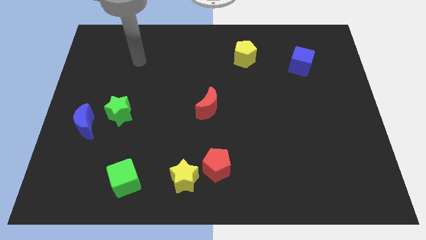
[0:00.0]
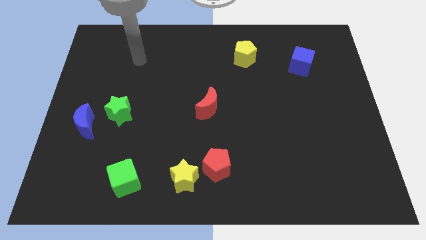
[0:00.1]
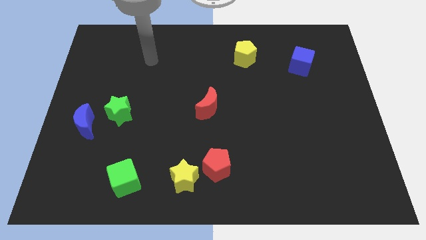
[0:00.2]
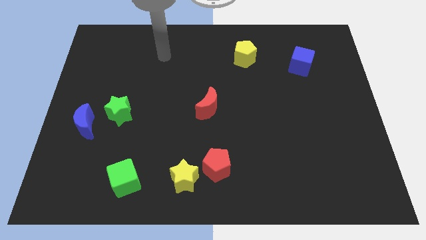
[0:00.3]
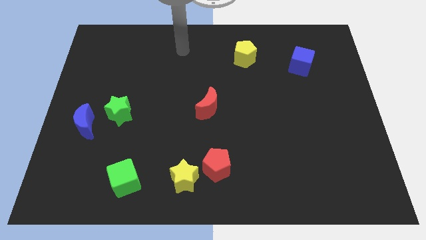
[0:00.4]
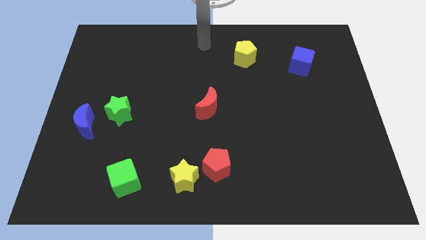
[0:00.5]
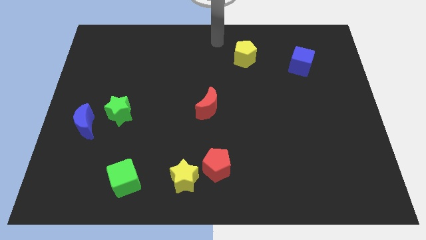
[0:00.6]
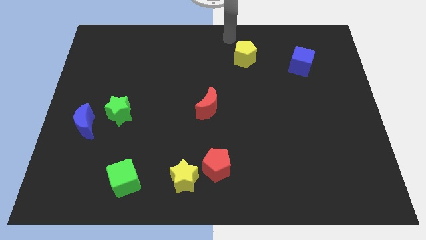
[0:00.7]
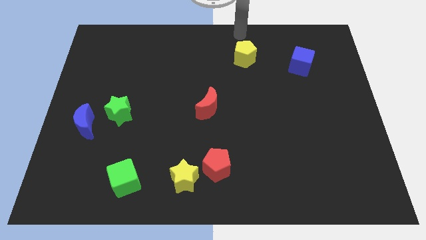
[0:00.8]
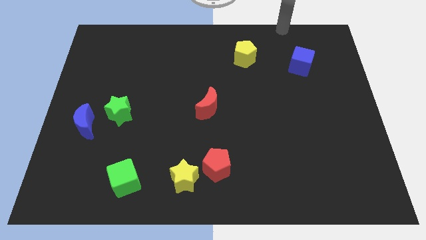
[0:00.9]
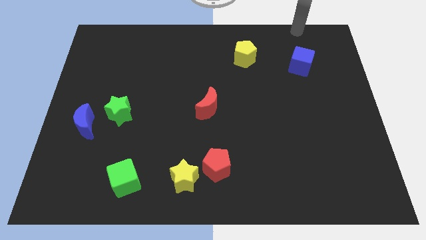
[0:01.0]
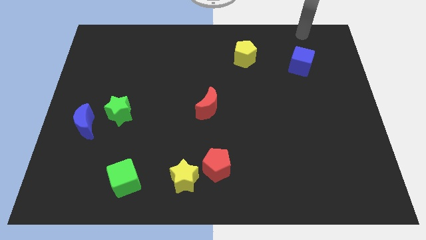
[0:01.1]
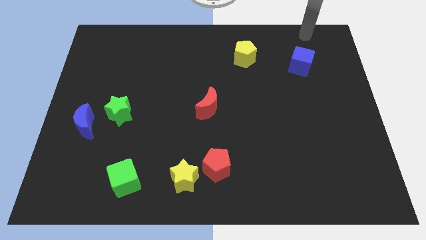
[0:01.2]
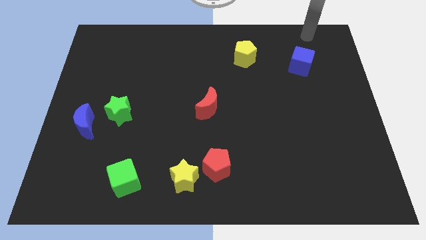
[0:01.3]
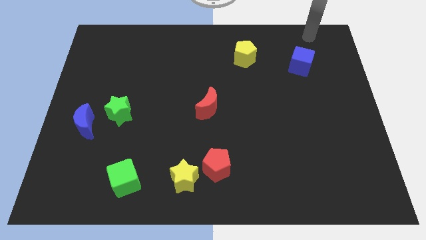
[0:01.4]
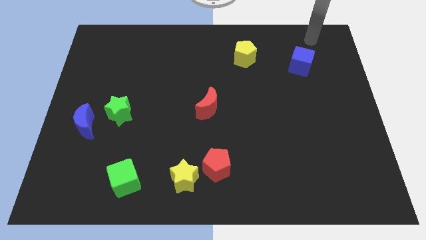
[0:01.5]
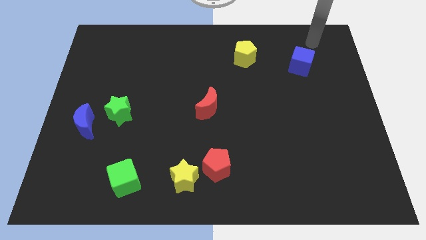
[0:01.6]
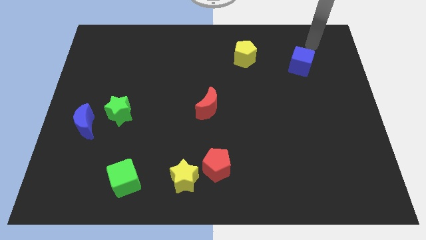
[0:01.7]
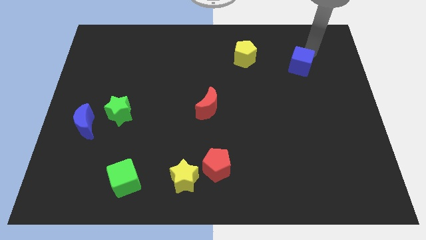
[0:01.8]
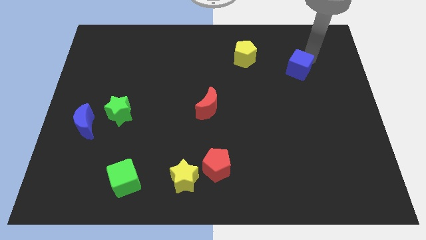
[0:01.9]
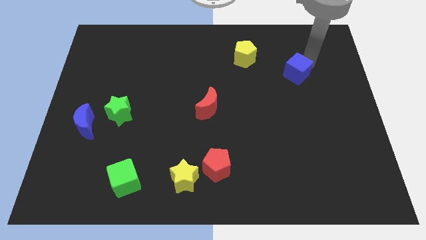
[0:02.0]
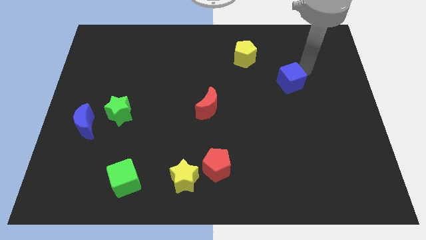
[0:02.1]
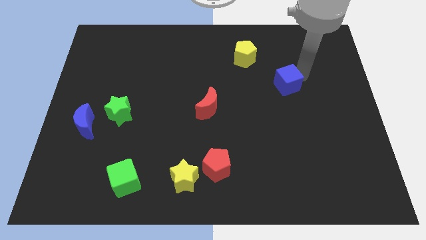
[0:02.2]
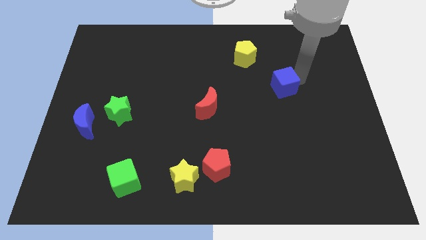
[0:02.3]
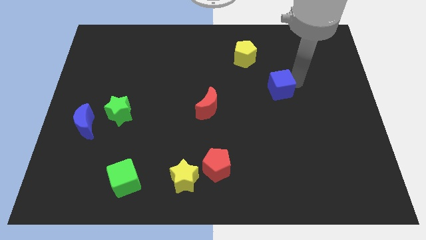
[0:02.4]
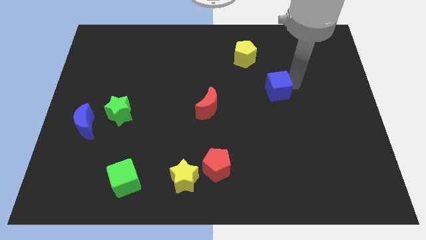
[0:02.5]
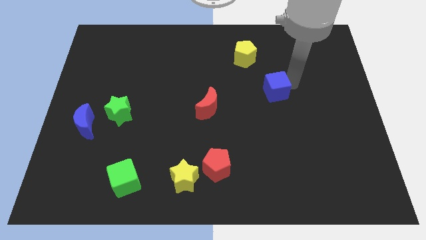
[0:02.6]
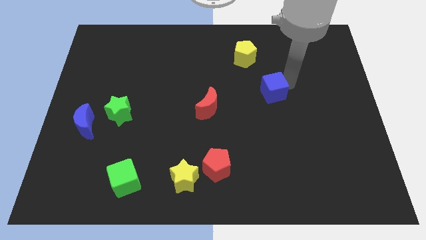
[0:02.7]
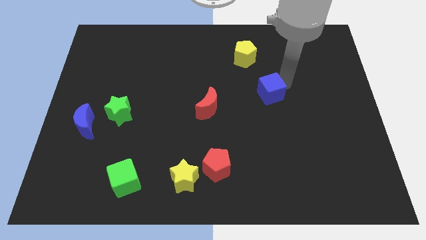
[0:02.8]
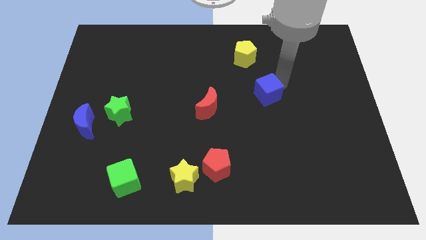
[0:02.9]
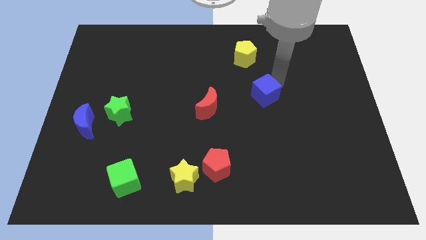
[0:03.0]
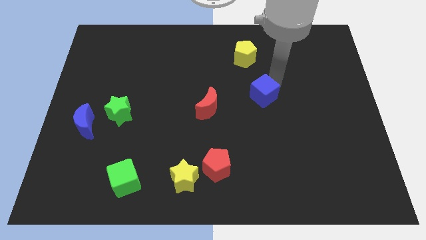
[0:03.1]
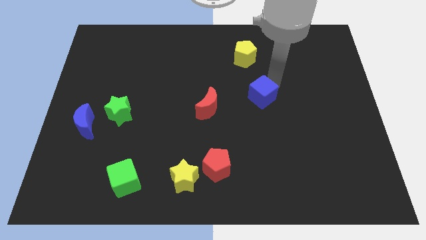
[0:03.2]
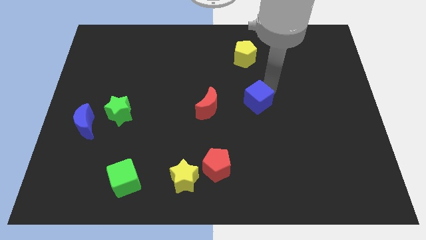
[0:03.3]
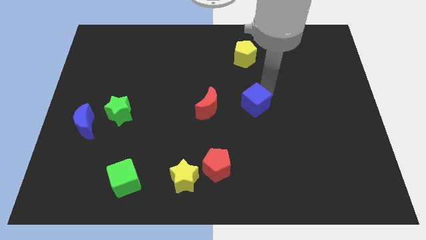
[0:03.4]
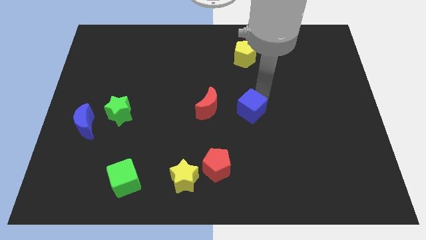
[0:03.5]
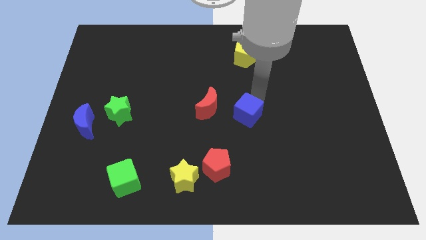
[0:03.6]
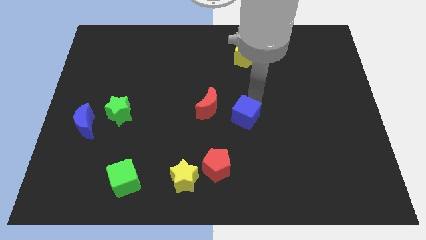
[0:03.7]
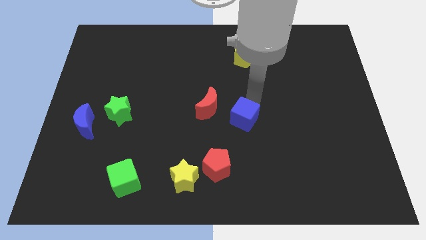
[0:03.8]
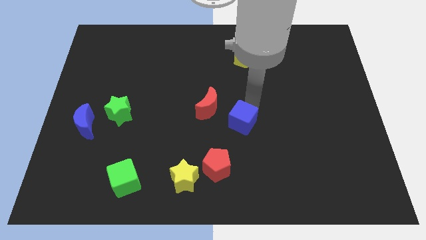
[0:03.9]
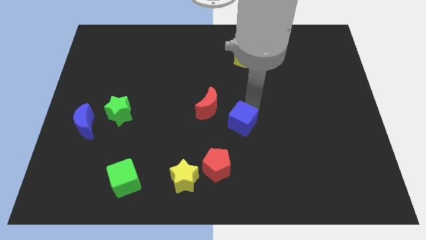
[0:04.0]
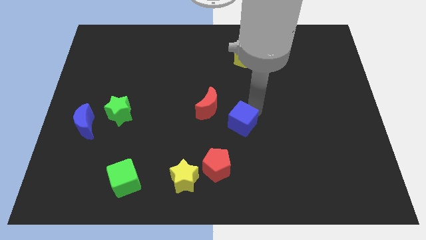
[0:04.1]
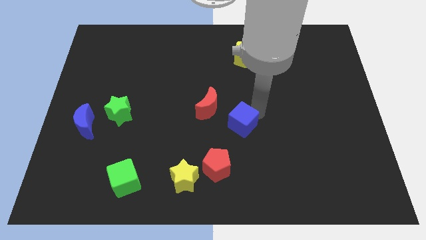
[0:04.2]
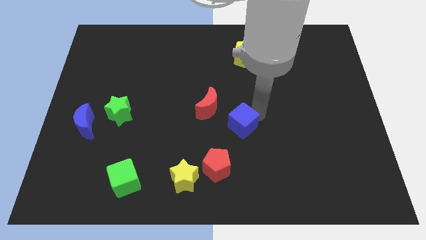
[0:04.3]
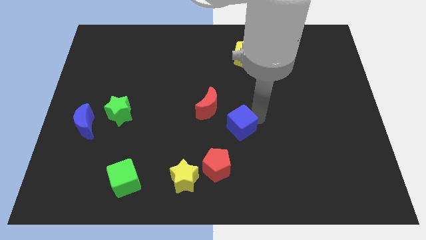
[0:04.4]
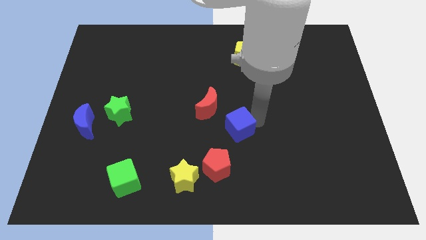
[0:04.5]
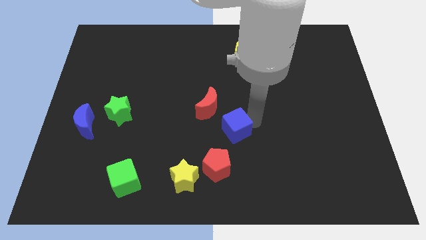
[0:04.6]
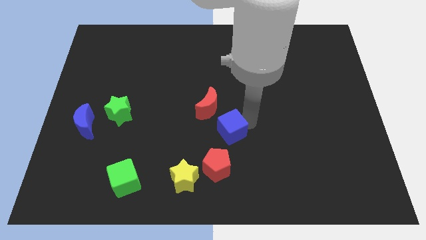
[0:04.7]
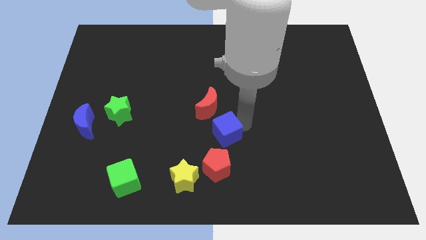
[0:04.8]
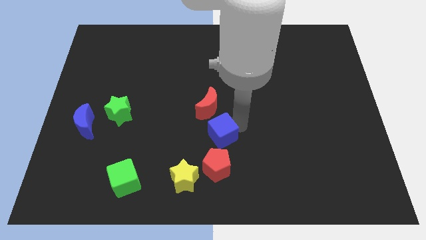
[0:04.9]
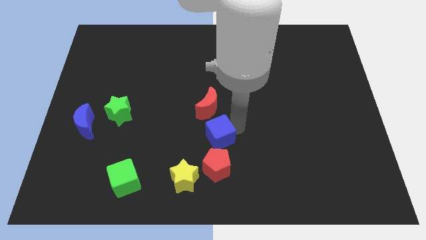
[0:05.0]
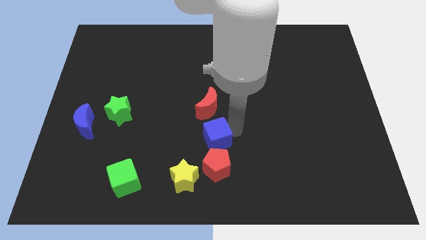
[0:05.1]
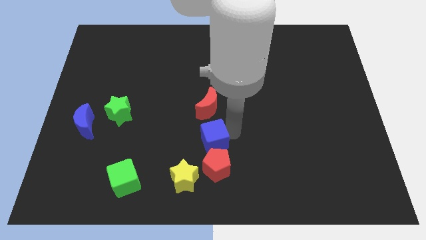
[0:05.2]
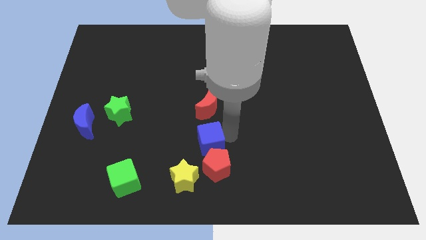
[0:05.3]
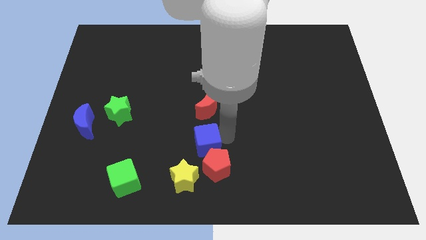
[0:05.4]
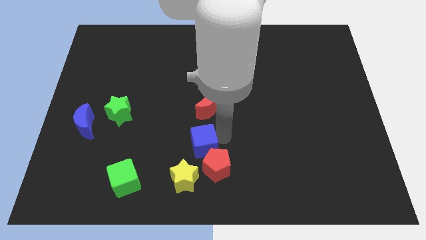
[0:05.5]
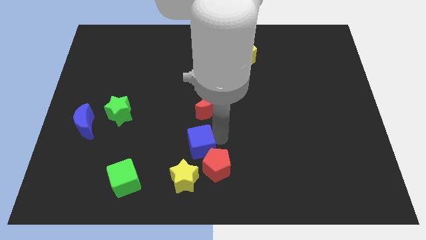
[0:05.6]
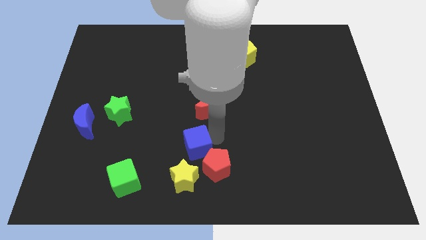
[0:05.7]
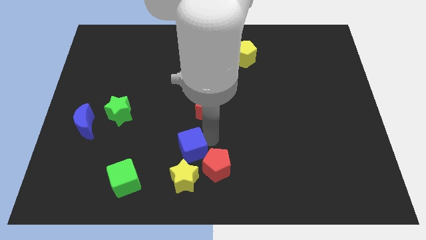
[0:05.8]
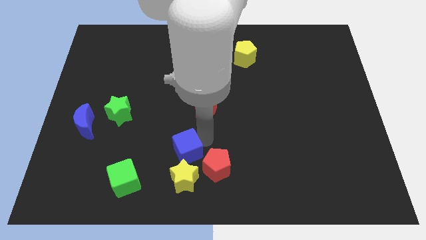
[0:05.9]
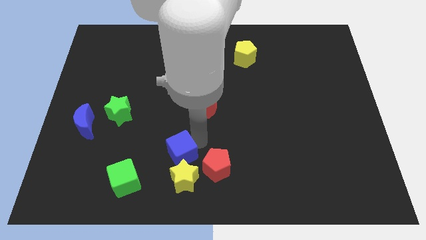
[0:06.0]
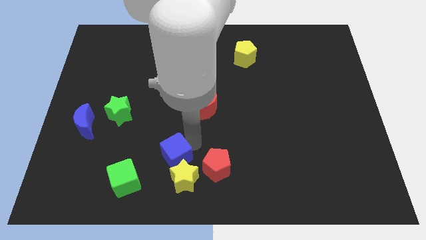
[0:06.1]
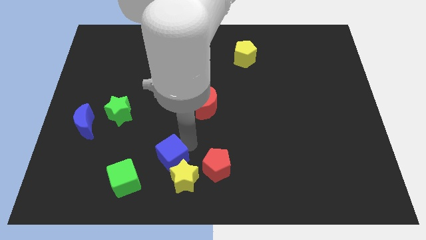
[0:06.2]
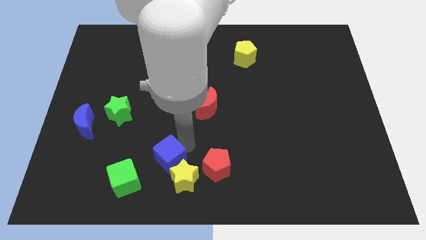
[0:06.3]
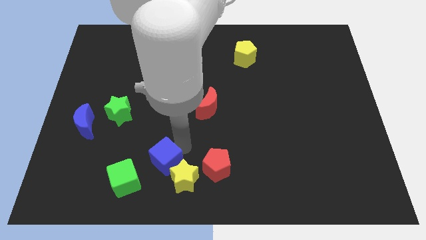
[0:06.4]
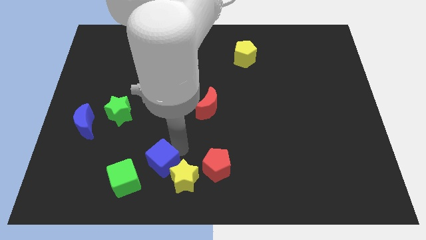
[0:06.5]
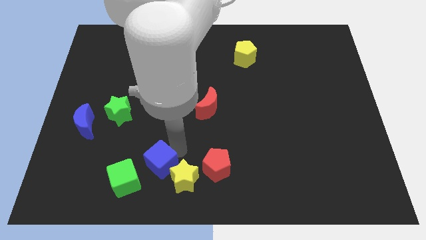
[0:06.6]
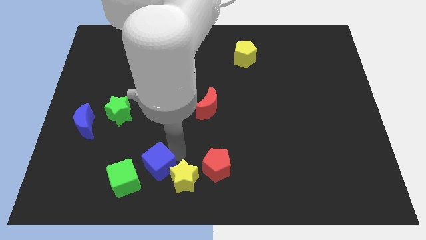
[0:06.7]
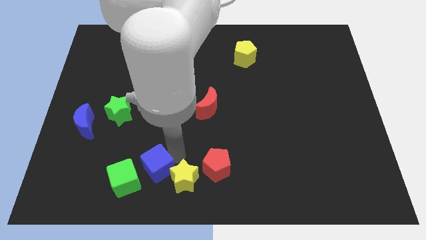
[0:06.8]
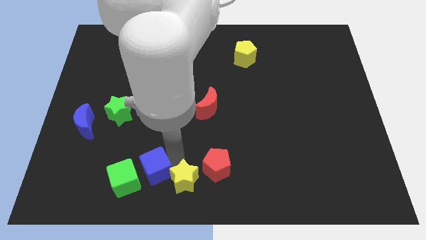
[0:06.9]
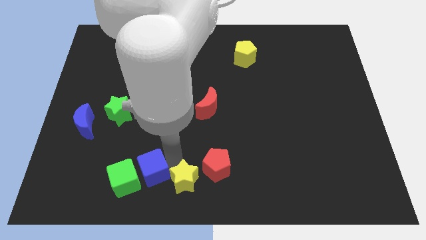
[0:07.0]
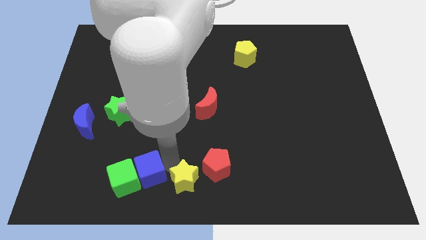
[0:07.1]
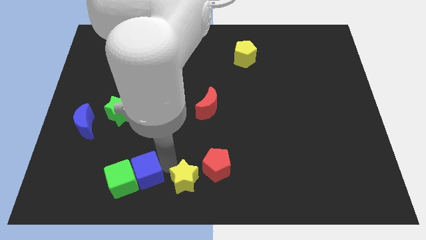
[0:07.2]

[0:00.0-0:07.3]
slide the blue cube to the green cube

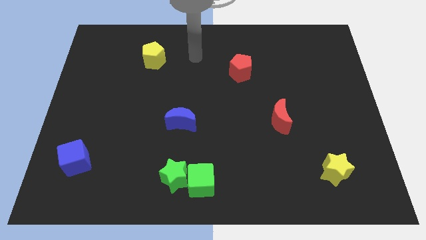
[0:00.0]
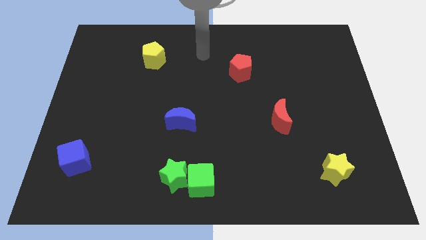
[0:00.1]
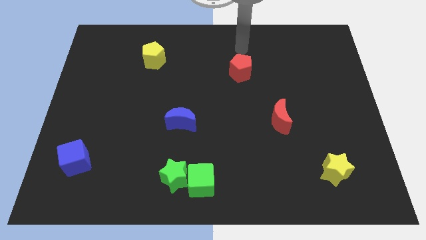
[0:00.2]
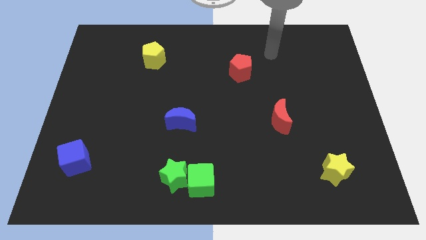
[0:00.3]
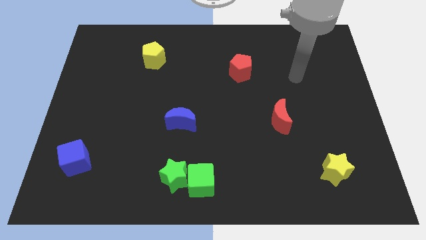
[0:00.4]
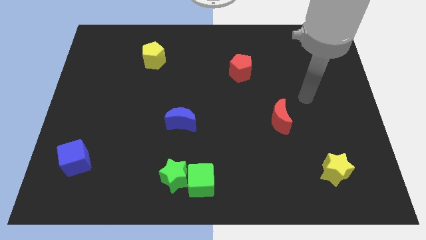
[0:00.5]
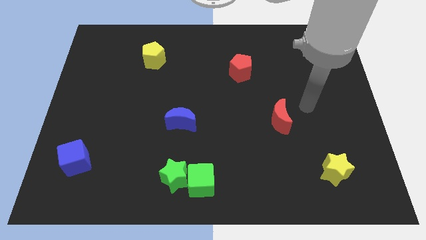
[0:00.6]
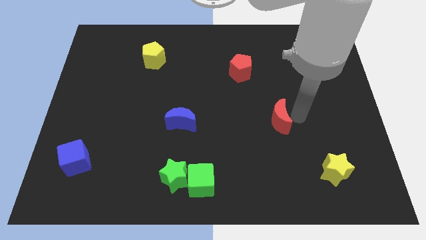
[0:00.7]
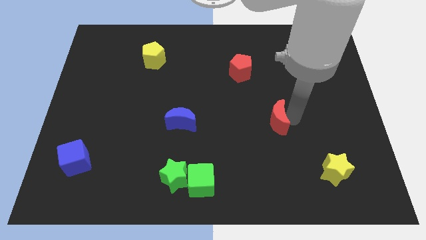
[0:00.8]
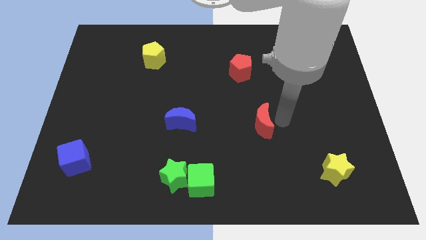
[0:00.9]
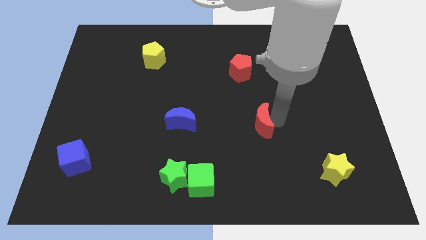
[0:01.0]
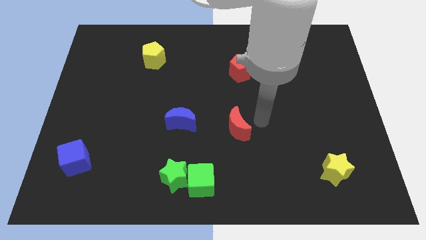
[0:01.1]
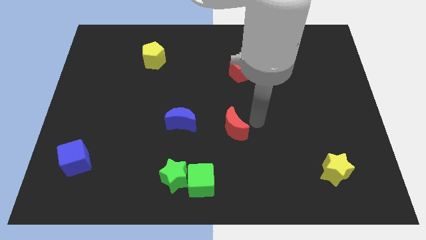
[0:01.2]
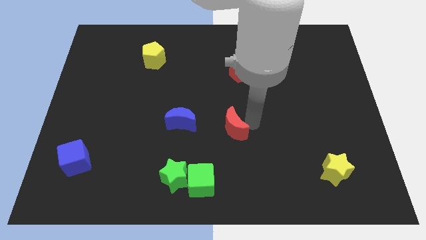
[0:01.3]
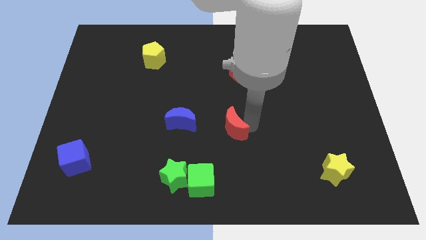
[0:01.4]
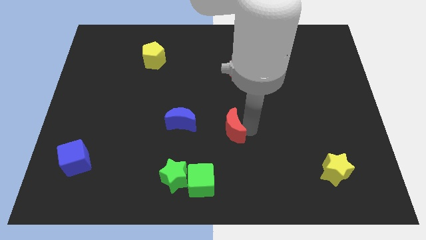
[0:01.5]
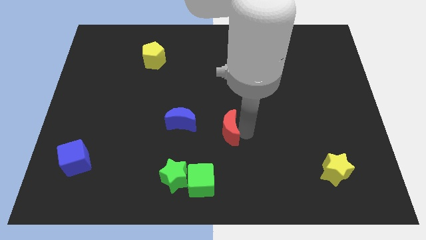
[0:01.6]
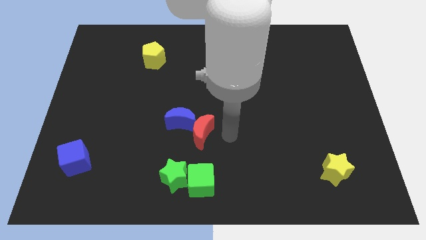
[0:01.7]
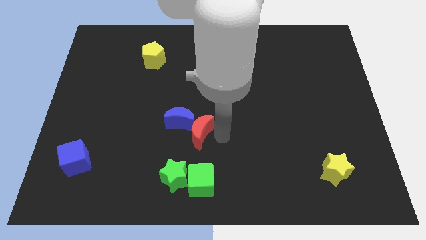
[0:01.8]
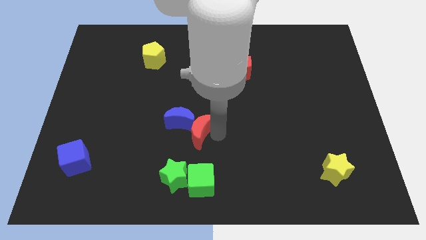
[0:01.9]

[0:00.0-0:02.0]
move the red moon next to the blue moon
